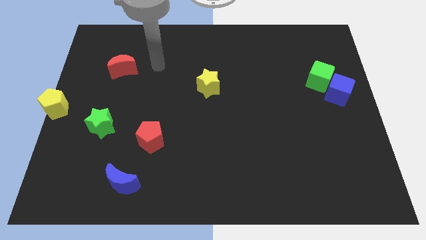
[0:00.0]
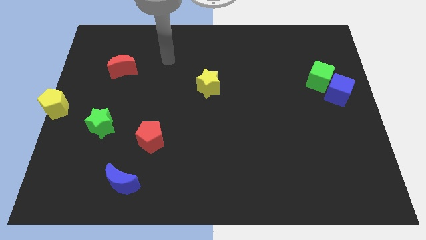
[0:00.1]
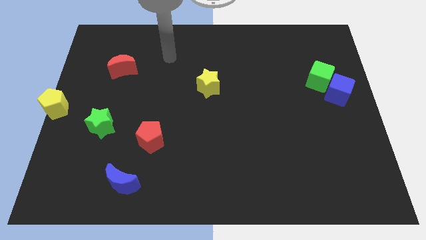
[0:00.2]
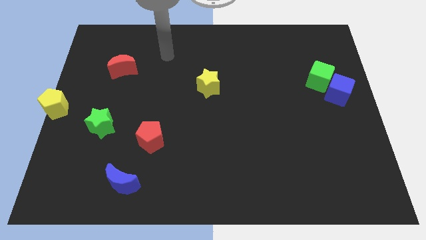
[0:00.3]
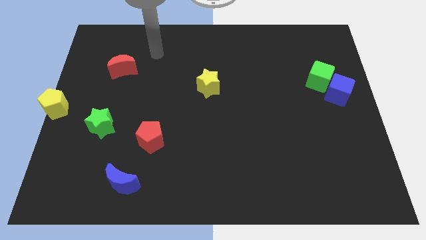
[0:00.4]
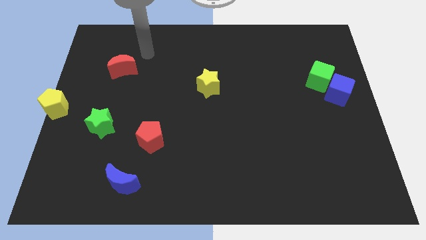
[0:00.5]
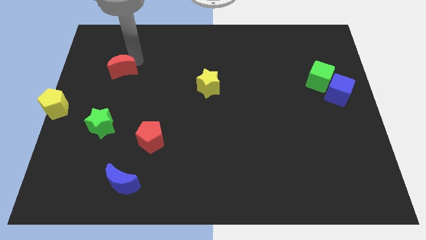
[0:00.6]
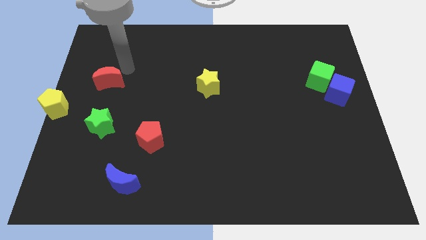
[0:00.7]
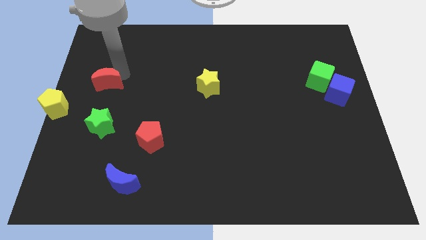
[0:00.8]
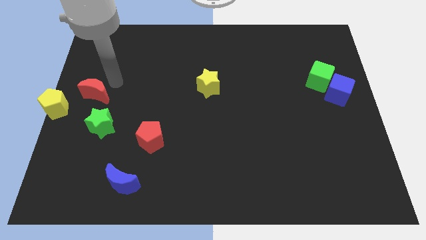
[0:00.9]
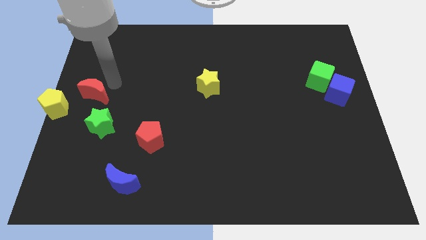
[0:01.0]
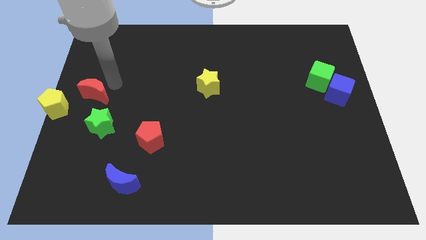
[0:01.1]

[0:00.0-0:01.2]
slide the red crescent towards the yellow pentagon

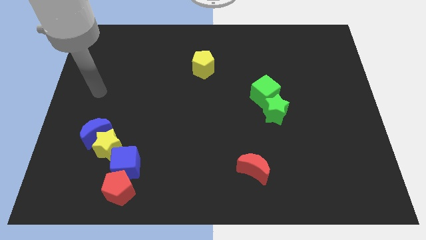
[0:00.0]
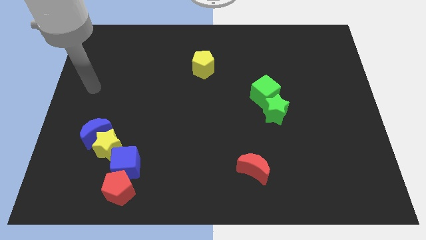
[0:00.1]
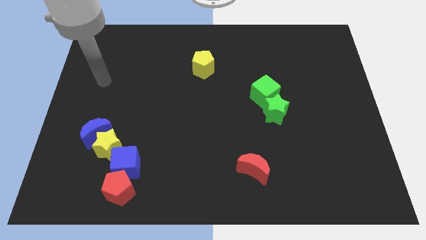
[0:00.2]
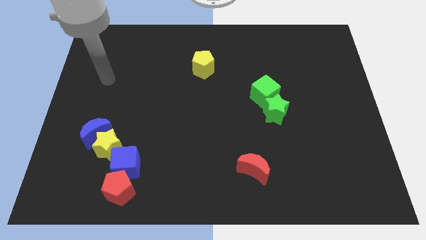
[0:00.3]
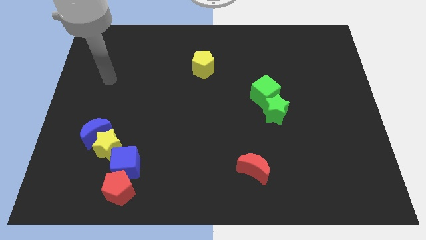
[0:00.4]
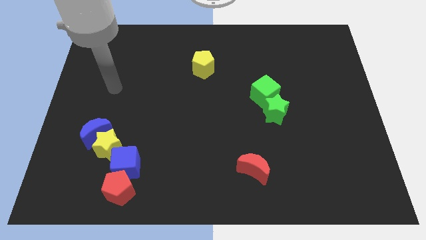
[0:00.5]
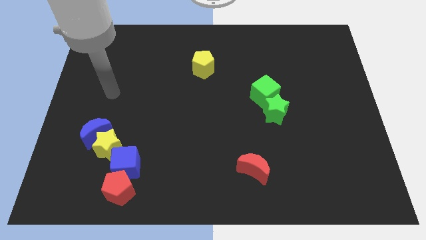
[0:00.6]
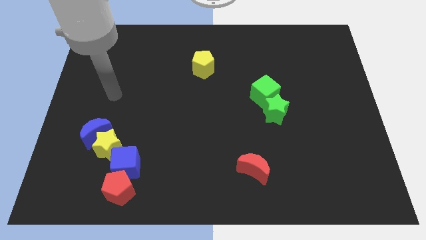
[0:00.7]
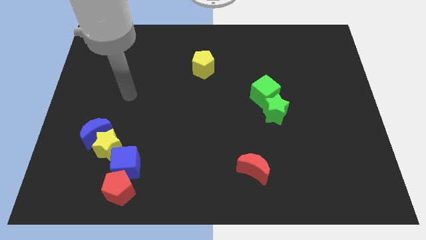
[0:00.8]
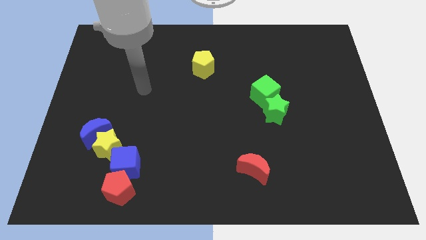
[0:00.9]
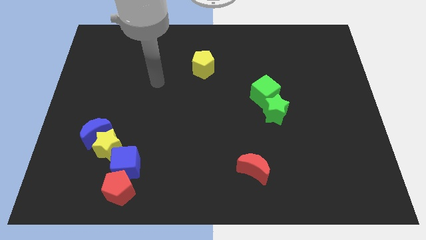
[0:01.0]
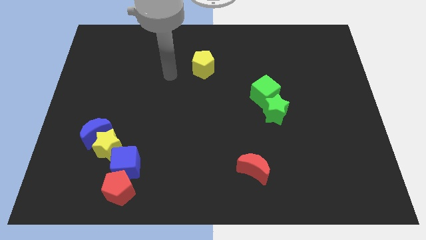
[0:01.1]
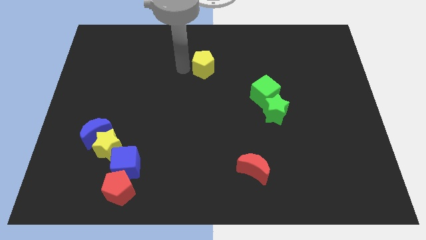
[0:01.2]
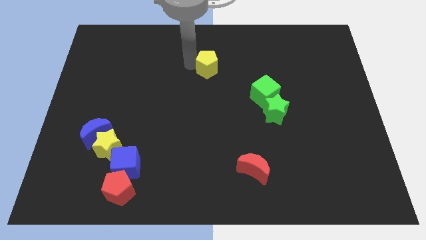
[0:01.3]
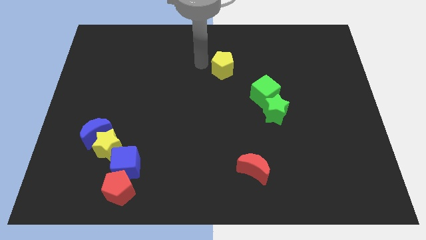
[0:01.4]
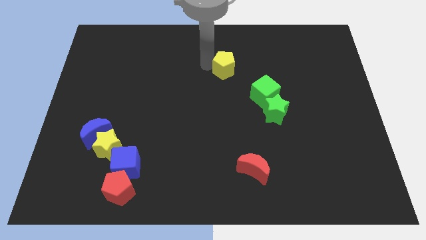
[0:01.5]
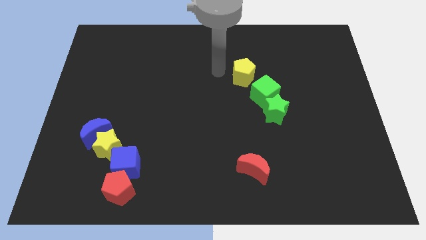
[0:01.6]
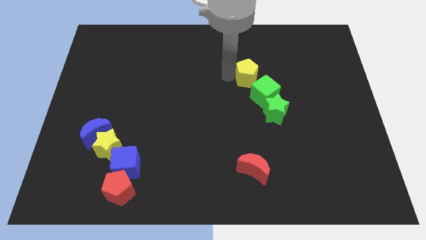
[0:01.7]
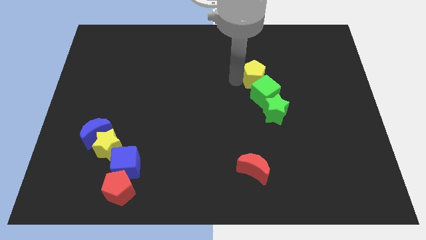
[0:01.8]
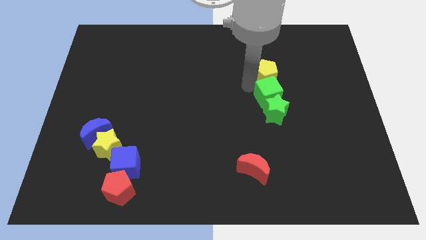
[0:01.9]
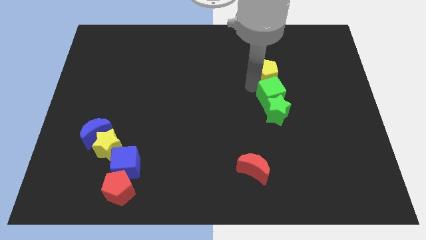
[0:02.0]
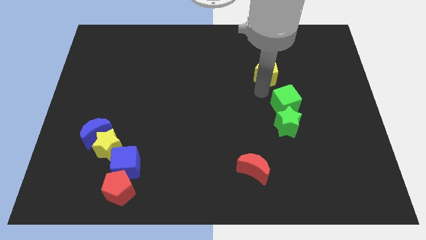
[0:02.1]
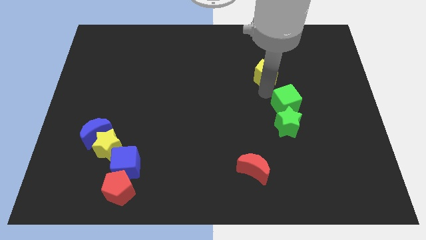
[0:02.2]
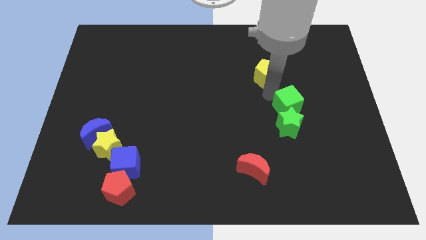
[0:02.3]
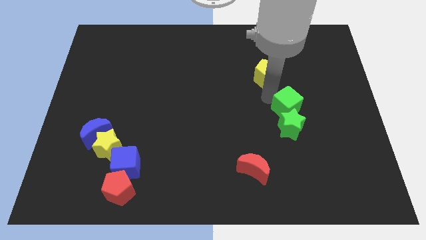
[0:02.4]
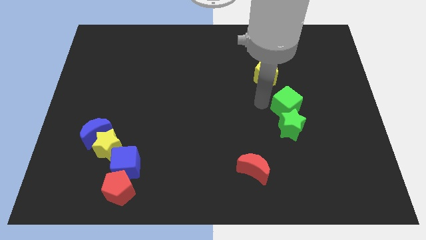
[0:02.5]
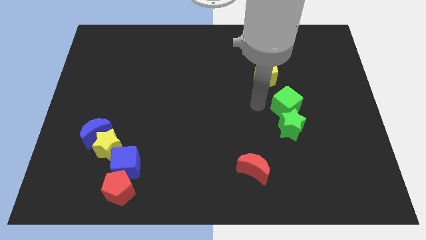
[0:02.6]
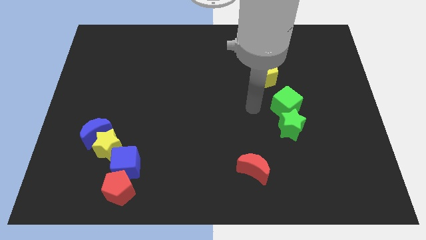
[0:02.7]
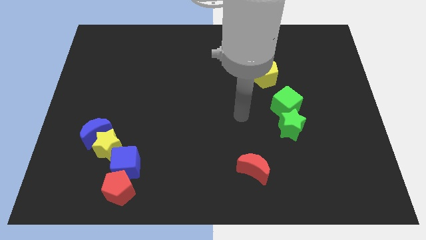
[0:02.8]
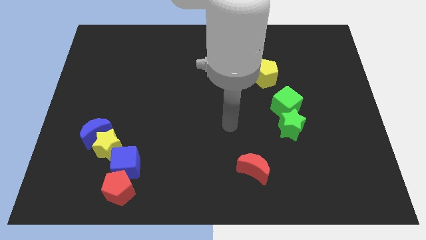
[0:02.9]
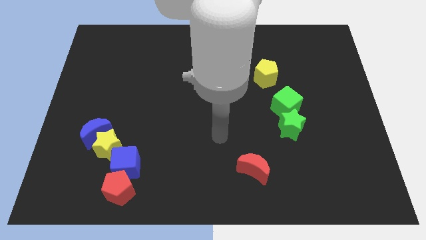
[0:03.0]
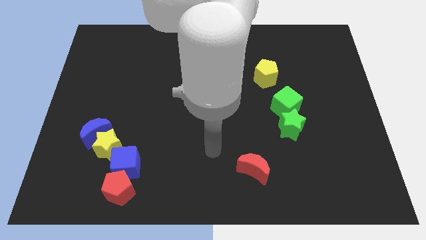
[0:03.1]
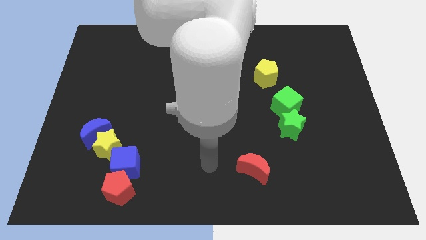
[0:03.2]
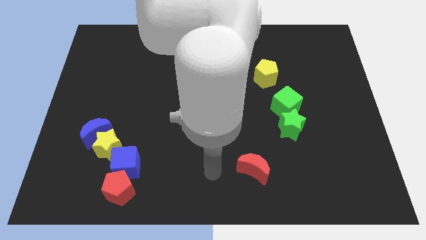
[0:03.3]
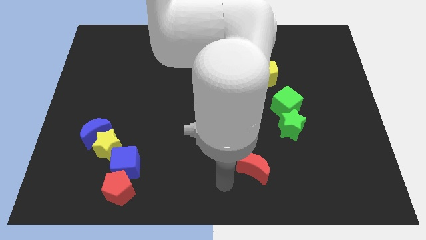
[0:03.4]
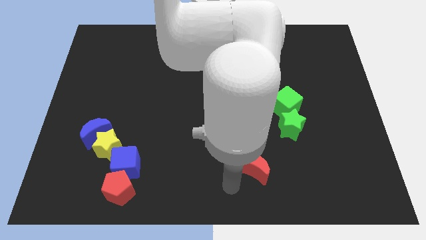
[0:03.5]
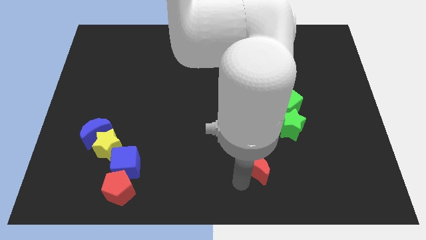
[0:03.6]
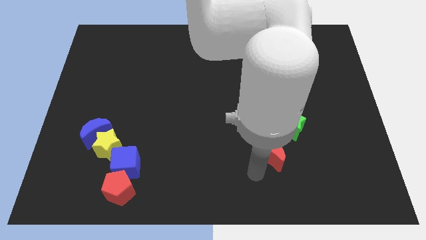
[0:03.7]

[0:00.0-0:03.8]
push the yellow pentagon to the right side

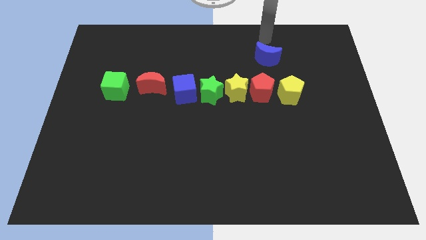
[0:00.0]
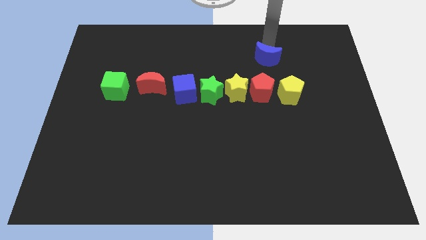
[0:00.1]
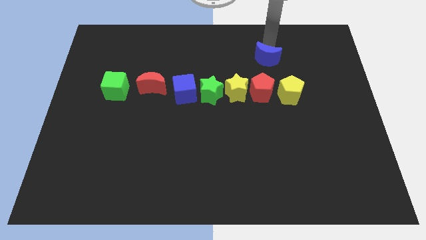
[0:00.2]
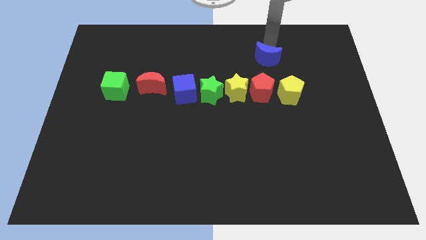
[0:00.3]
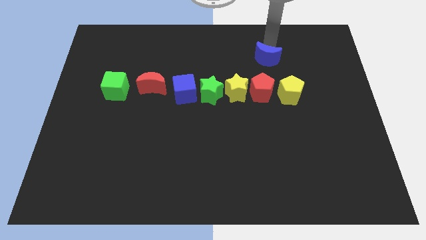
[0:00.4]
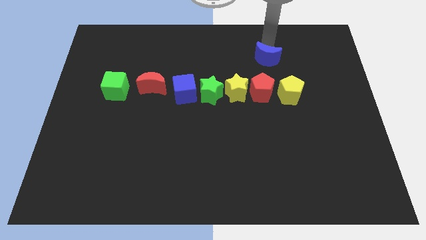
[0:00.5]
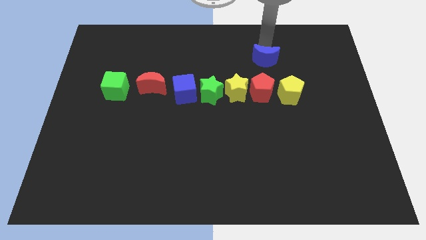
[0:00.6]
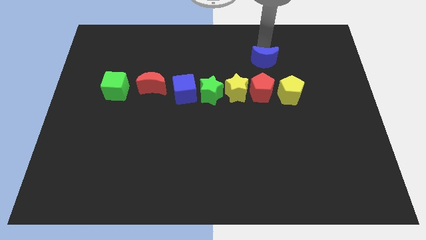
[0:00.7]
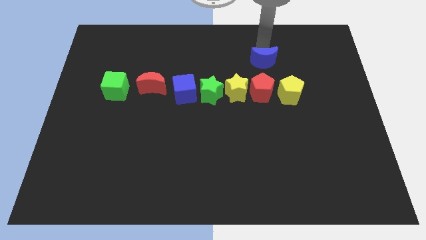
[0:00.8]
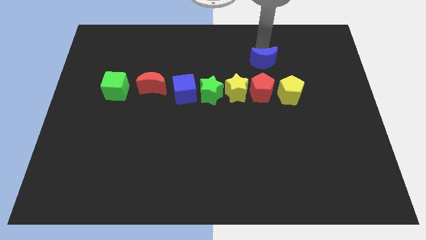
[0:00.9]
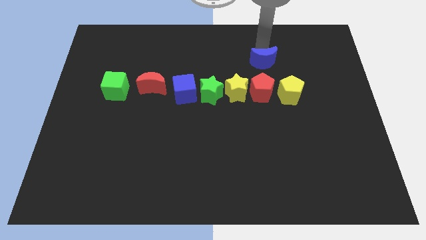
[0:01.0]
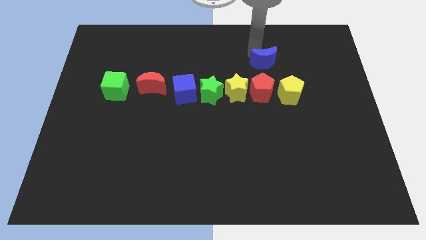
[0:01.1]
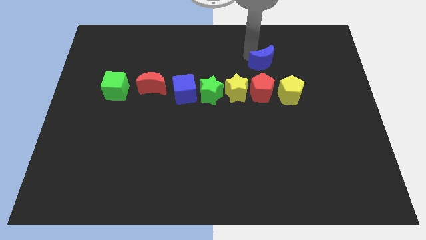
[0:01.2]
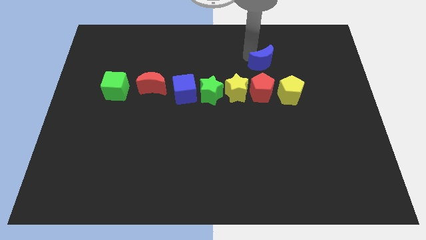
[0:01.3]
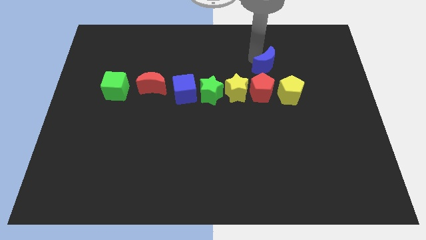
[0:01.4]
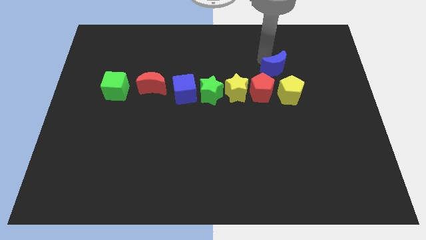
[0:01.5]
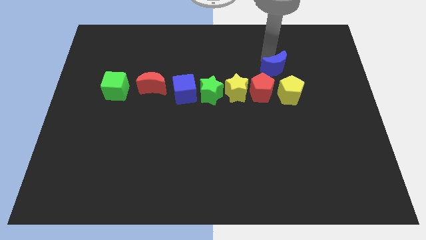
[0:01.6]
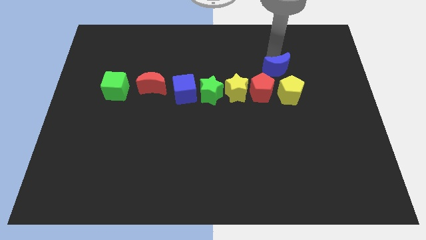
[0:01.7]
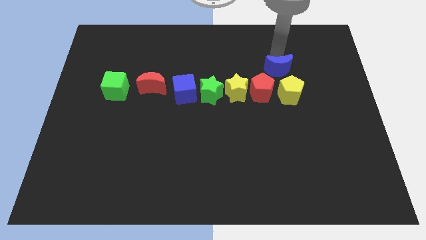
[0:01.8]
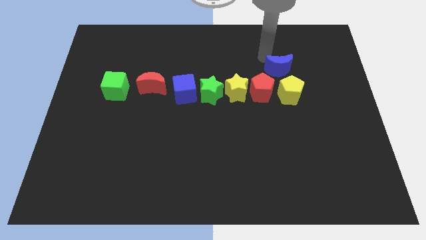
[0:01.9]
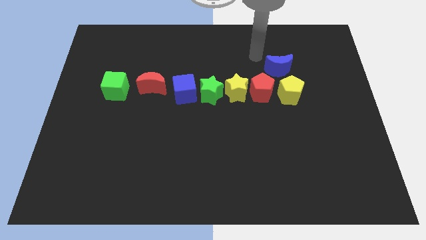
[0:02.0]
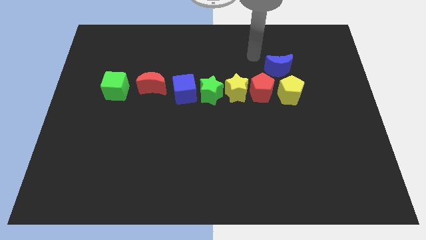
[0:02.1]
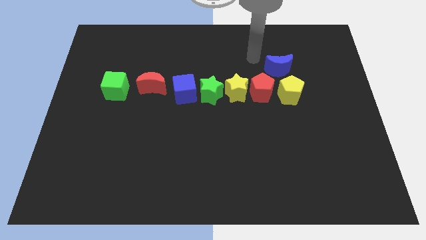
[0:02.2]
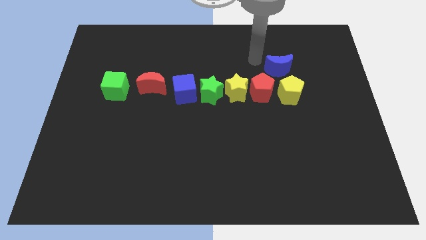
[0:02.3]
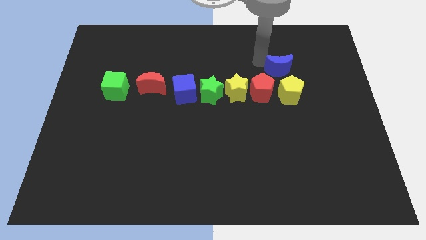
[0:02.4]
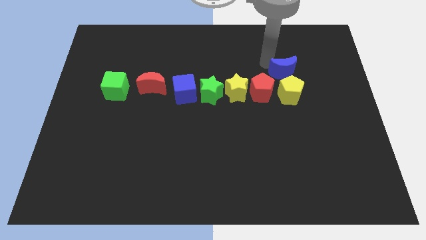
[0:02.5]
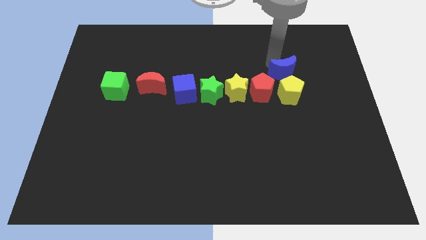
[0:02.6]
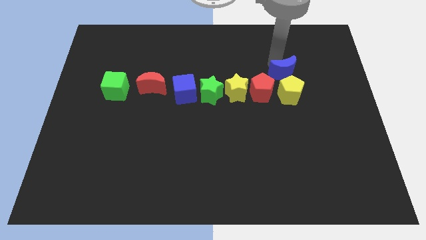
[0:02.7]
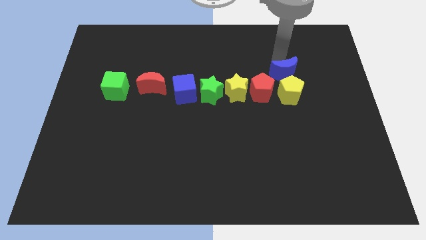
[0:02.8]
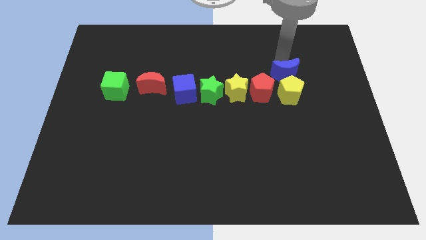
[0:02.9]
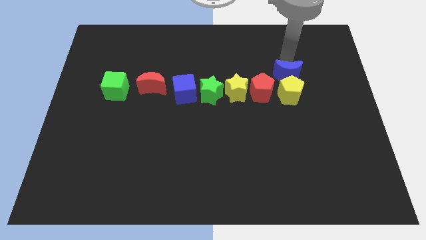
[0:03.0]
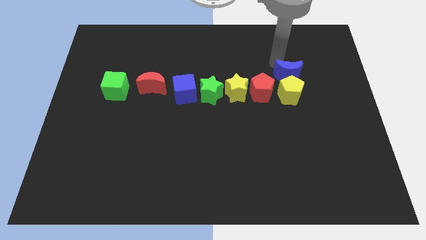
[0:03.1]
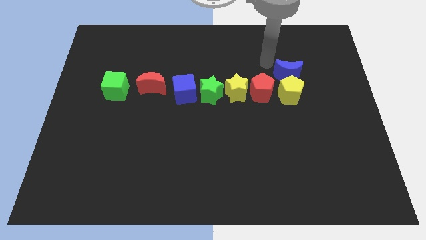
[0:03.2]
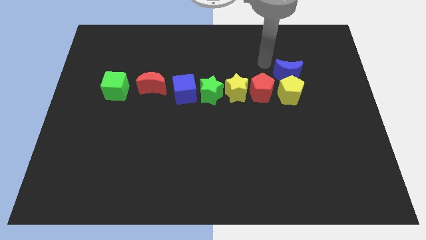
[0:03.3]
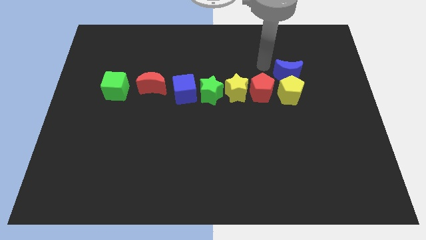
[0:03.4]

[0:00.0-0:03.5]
move the blue crescent above the yellow pentagon

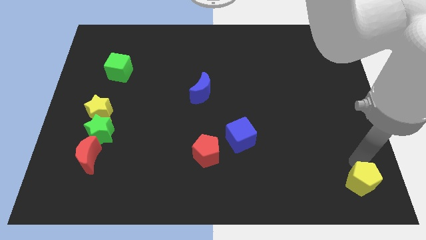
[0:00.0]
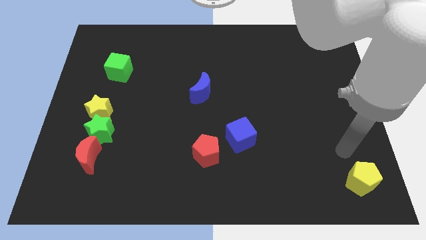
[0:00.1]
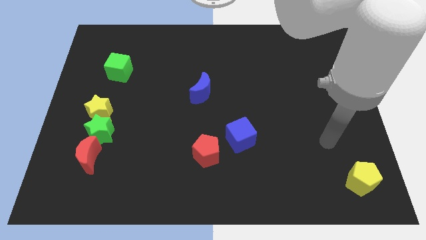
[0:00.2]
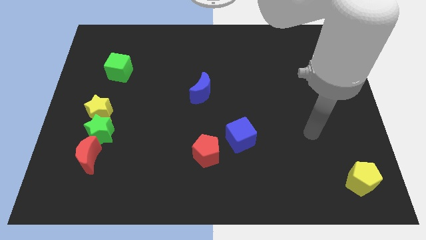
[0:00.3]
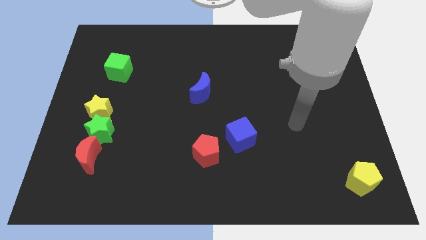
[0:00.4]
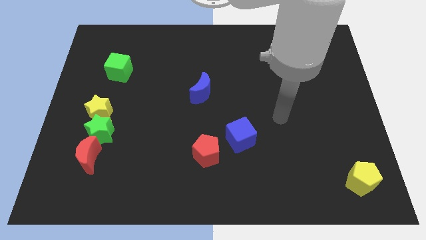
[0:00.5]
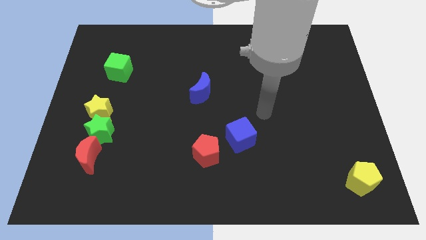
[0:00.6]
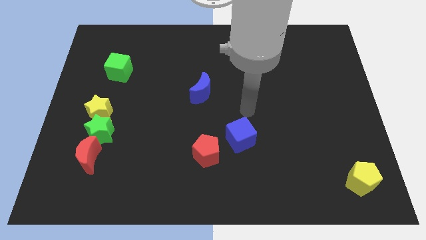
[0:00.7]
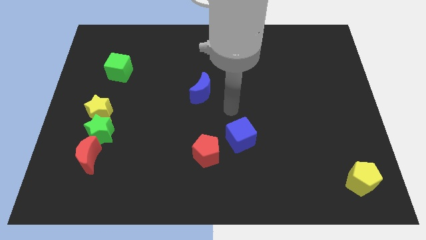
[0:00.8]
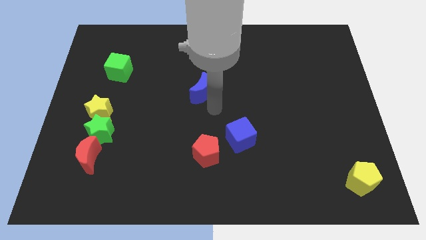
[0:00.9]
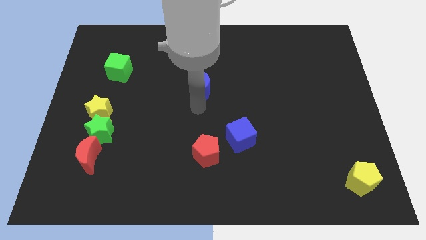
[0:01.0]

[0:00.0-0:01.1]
move your arm to the center of the board
